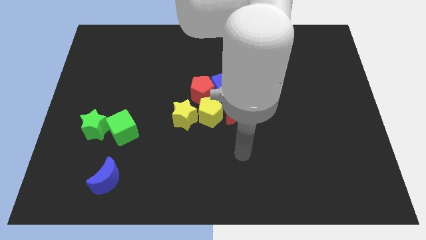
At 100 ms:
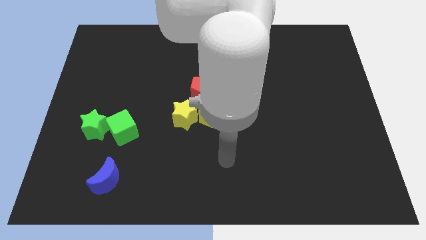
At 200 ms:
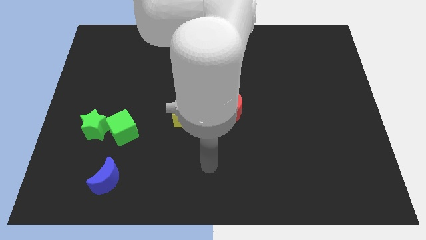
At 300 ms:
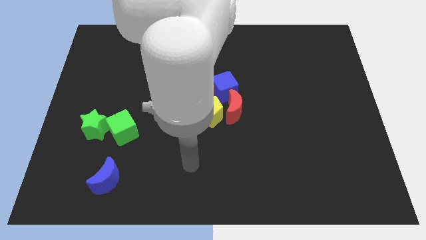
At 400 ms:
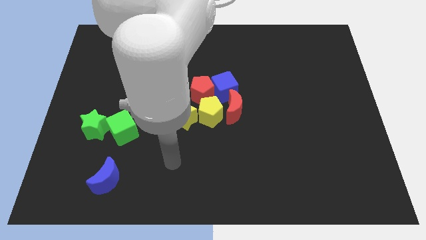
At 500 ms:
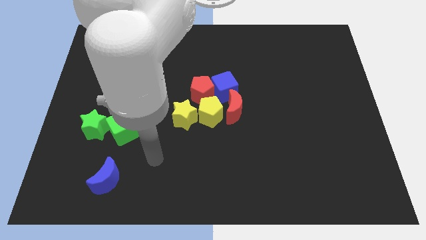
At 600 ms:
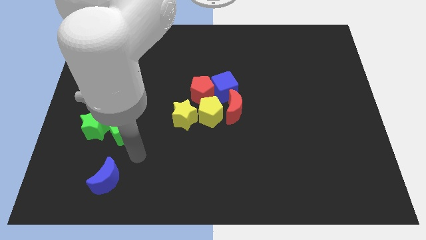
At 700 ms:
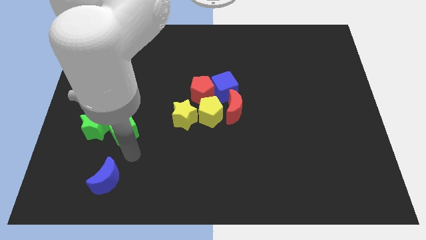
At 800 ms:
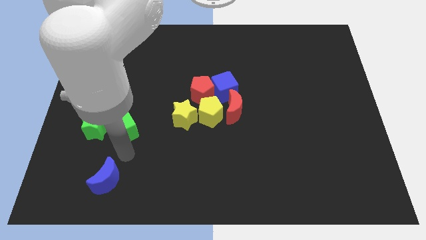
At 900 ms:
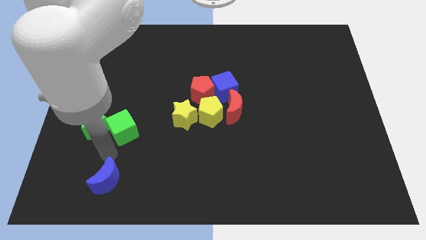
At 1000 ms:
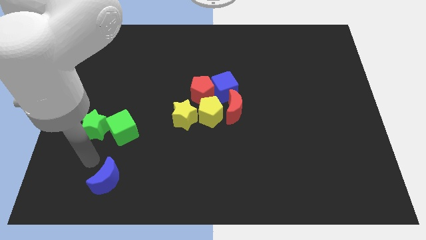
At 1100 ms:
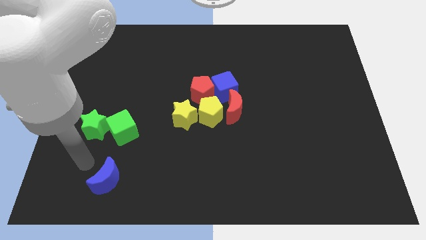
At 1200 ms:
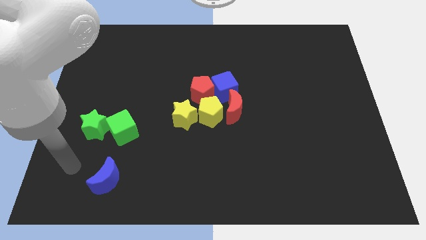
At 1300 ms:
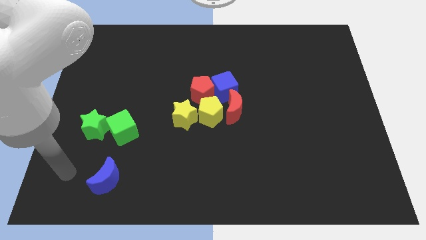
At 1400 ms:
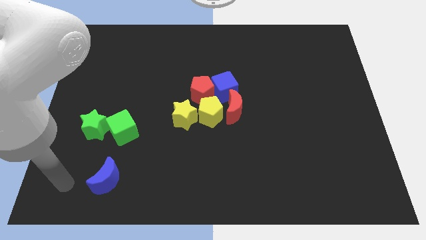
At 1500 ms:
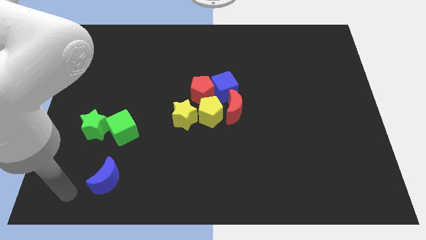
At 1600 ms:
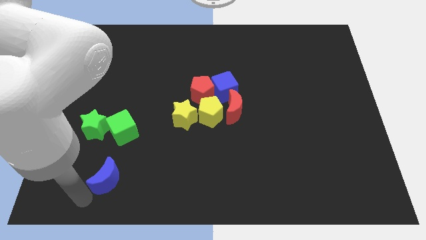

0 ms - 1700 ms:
move your arm close to the blue crescent

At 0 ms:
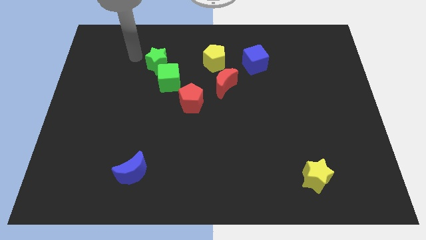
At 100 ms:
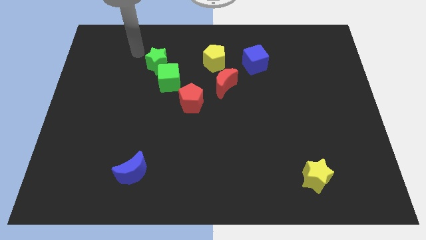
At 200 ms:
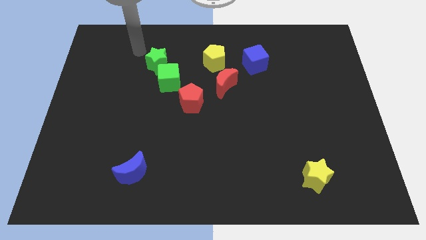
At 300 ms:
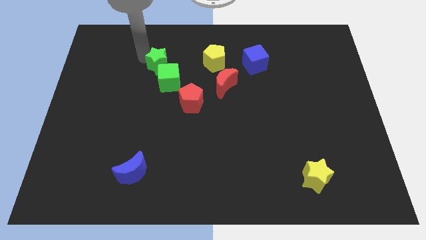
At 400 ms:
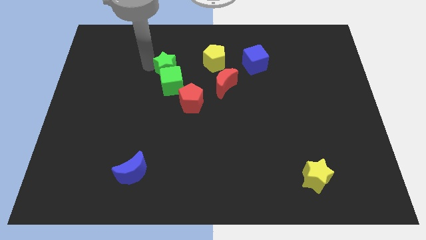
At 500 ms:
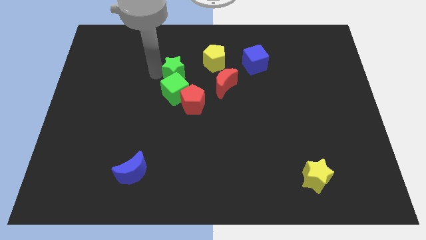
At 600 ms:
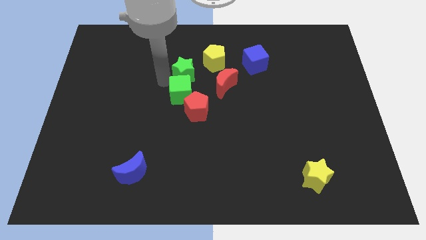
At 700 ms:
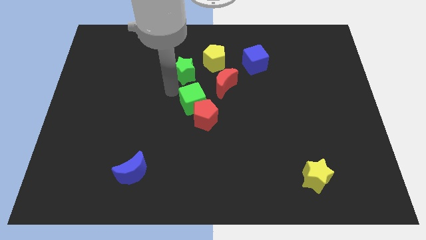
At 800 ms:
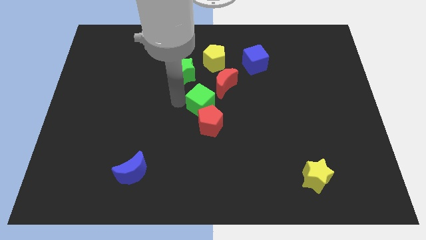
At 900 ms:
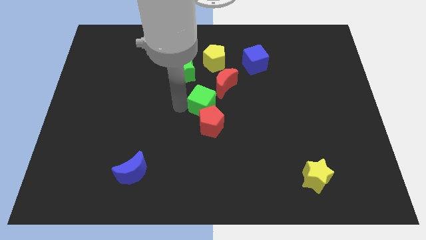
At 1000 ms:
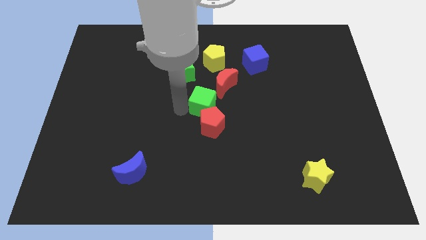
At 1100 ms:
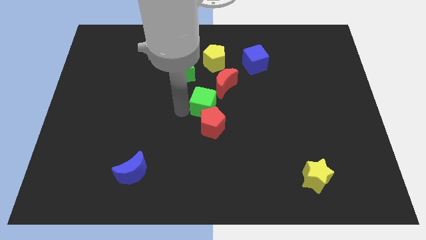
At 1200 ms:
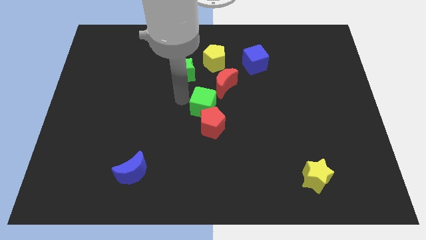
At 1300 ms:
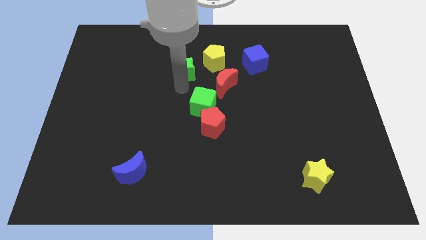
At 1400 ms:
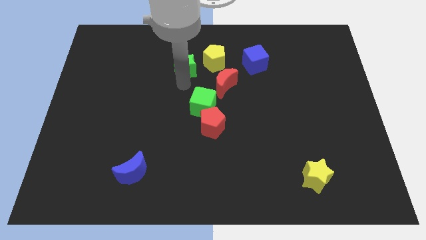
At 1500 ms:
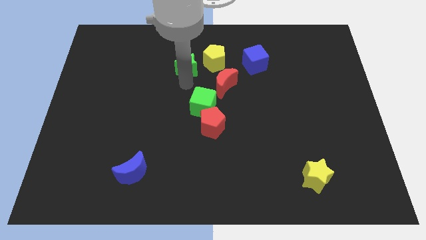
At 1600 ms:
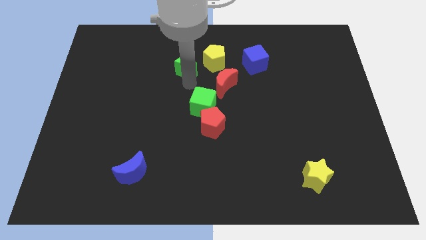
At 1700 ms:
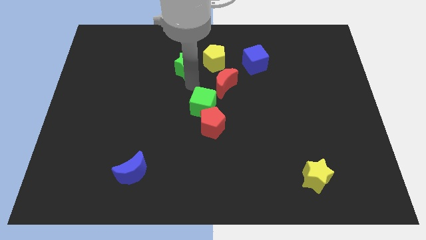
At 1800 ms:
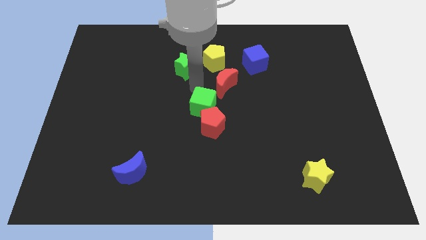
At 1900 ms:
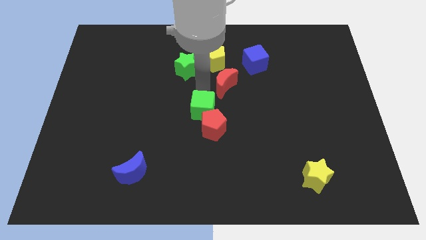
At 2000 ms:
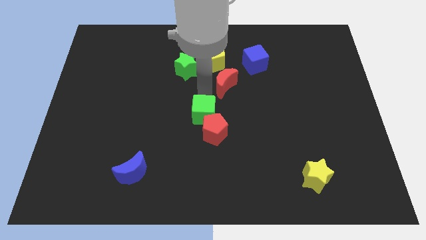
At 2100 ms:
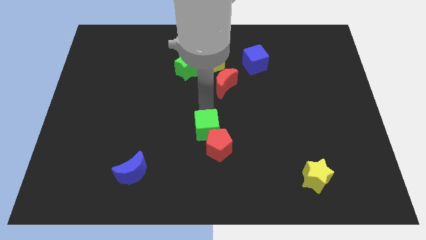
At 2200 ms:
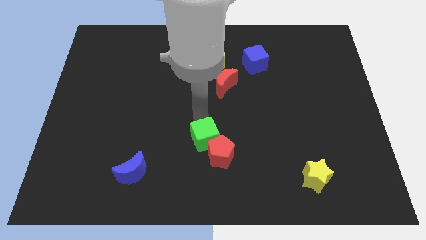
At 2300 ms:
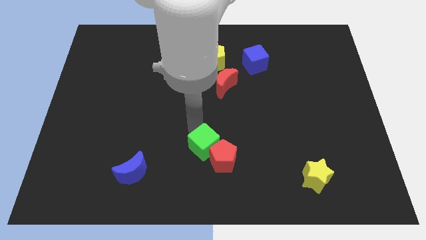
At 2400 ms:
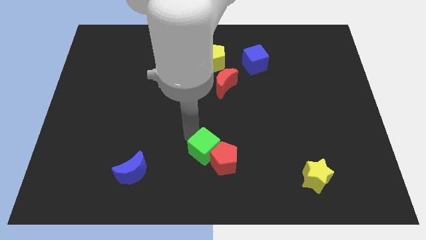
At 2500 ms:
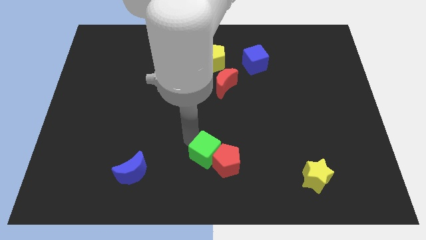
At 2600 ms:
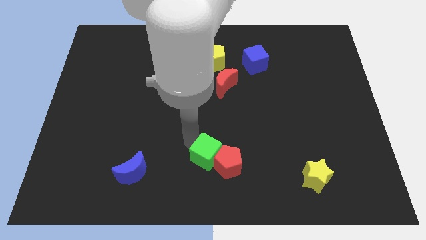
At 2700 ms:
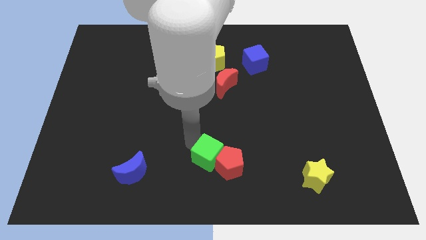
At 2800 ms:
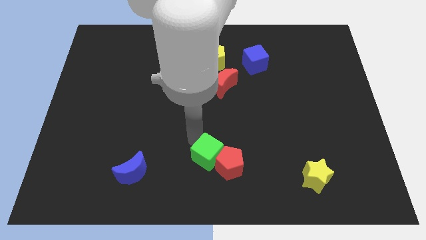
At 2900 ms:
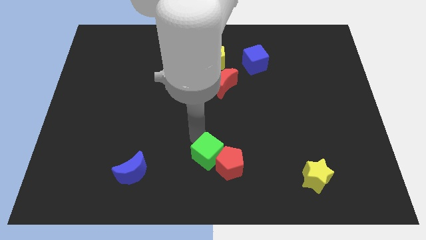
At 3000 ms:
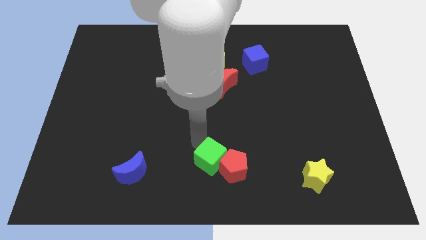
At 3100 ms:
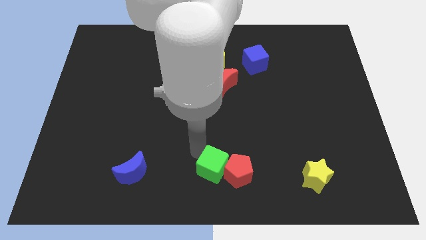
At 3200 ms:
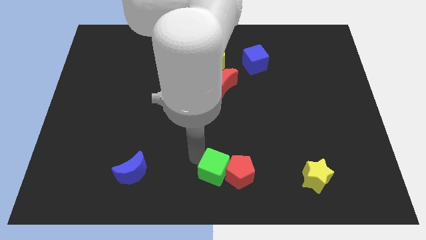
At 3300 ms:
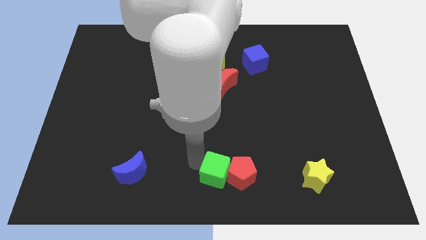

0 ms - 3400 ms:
slide the green cube and the red pentagon towards the bottom center

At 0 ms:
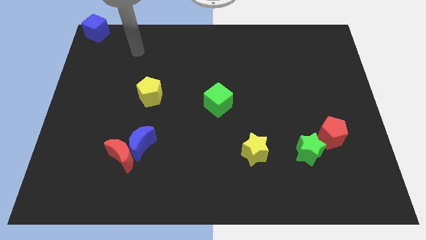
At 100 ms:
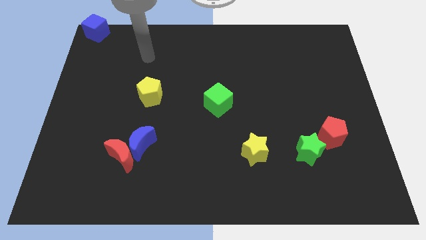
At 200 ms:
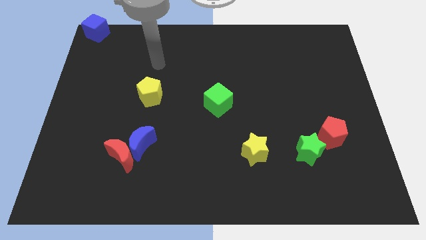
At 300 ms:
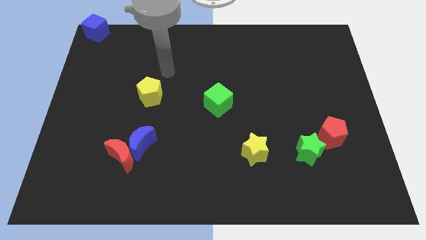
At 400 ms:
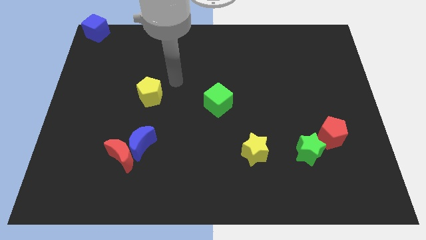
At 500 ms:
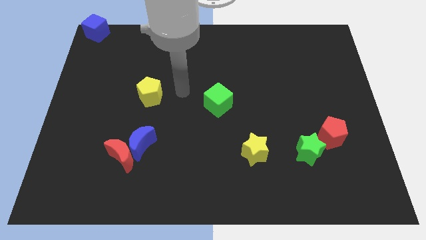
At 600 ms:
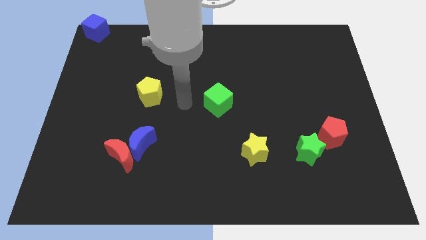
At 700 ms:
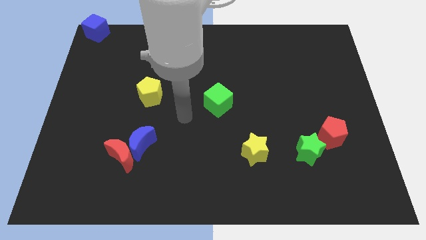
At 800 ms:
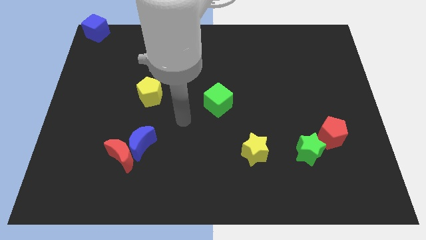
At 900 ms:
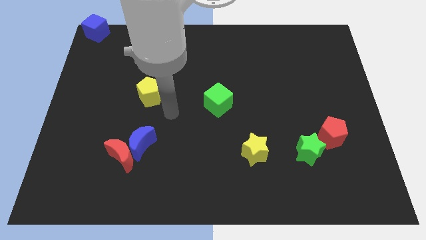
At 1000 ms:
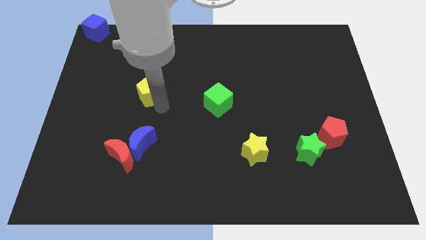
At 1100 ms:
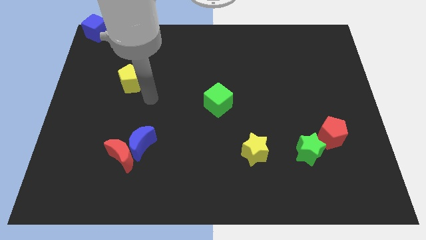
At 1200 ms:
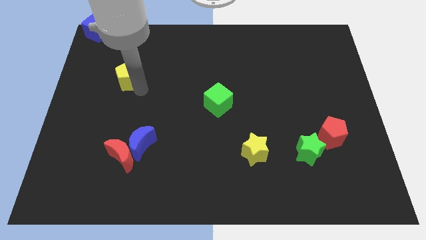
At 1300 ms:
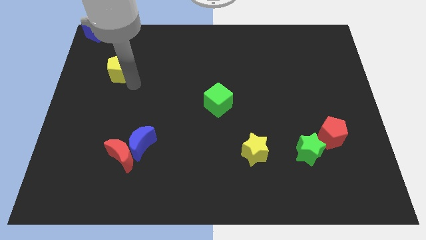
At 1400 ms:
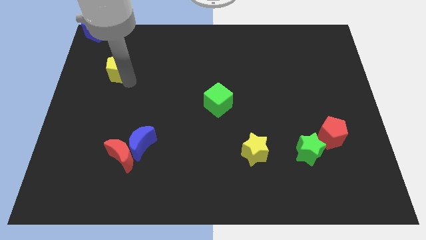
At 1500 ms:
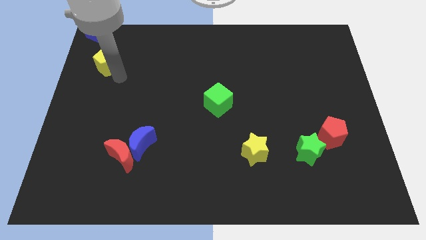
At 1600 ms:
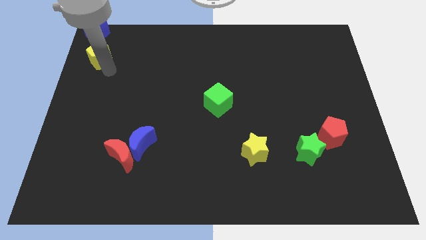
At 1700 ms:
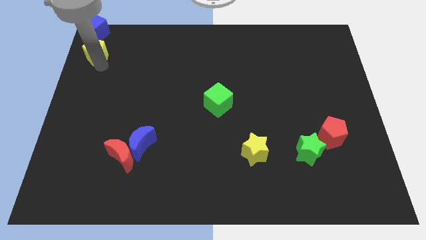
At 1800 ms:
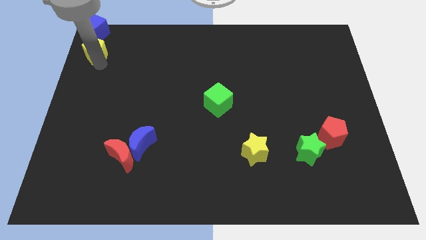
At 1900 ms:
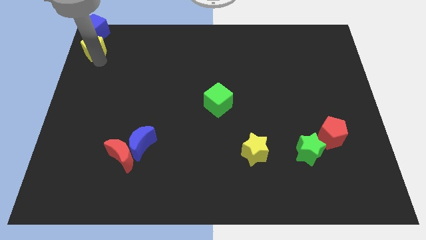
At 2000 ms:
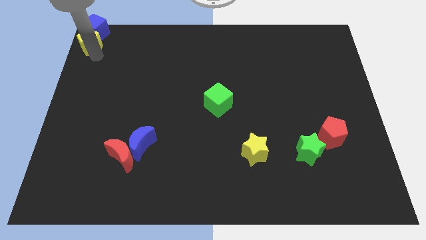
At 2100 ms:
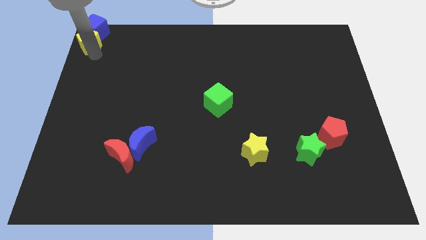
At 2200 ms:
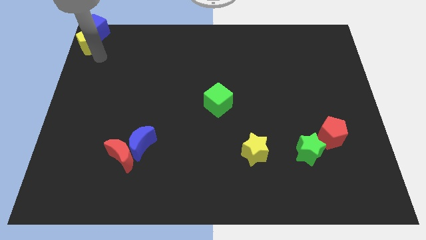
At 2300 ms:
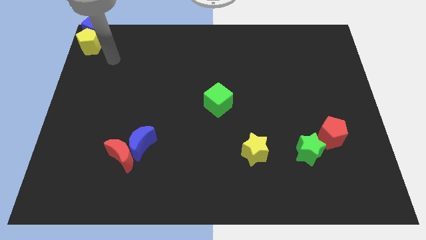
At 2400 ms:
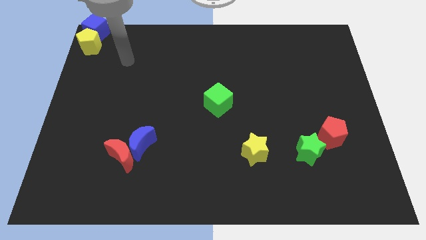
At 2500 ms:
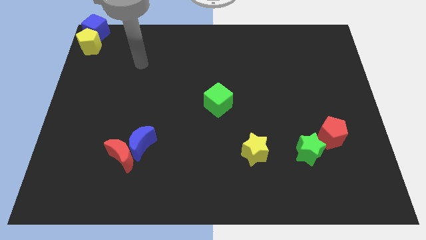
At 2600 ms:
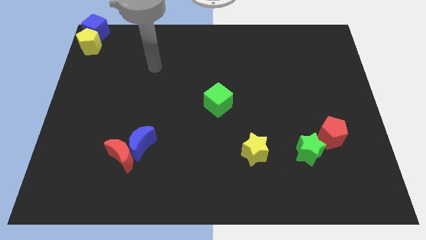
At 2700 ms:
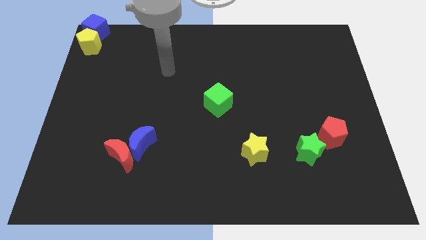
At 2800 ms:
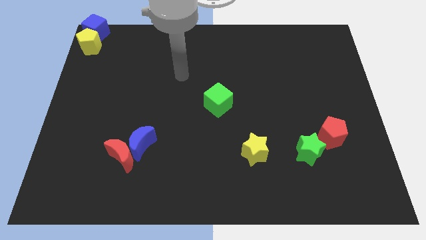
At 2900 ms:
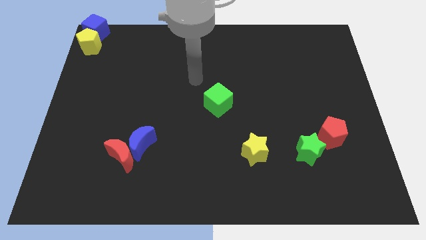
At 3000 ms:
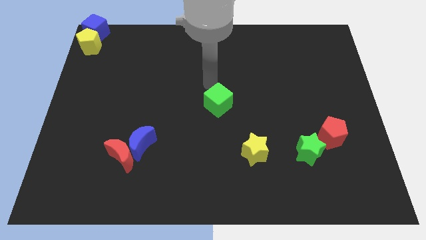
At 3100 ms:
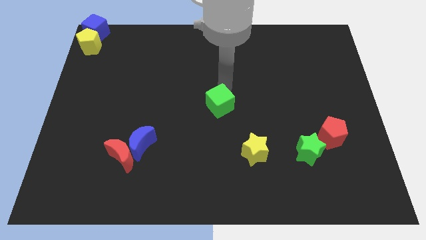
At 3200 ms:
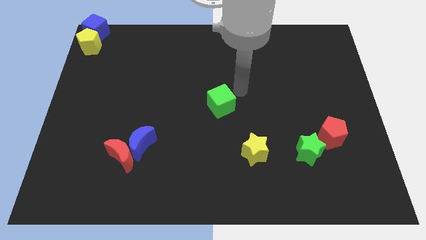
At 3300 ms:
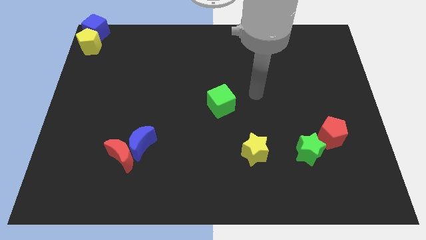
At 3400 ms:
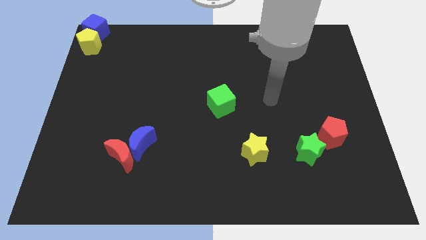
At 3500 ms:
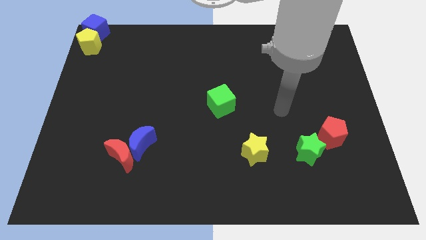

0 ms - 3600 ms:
push the yellow pentagon below the blue cube

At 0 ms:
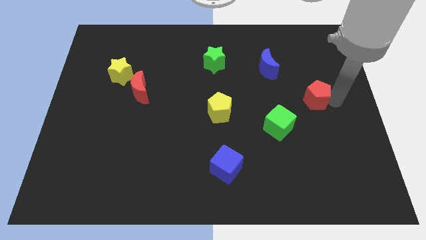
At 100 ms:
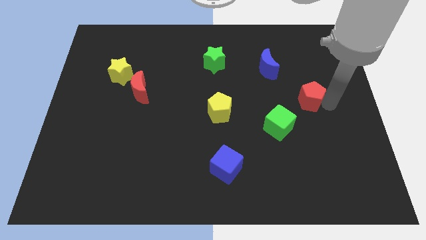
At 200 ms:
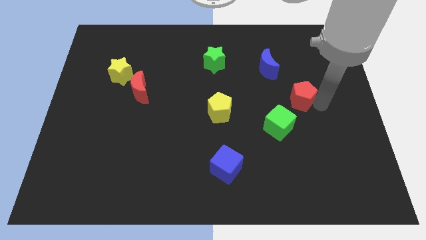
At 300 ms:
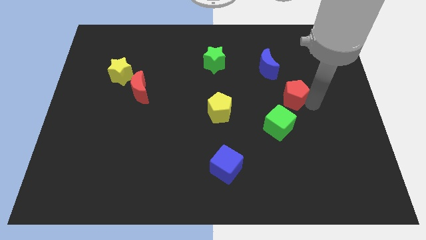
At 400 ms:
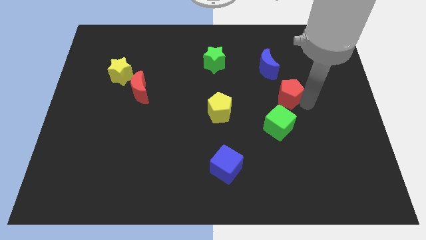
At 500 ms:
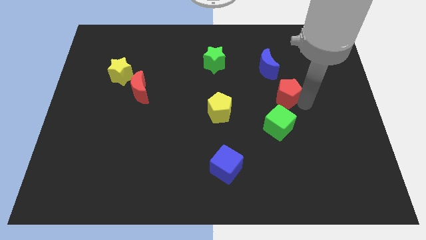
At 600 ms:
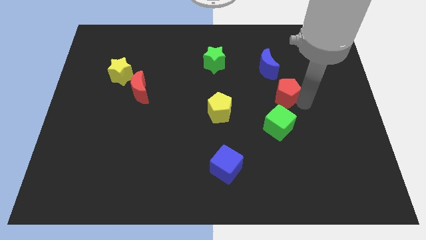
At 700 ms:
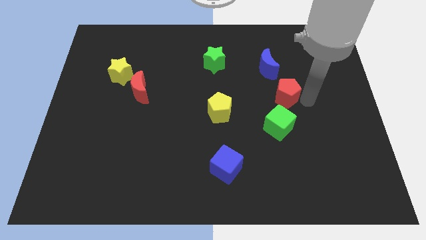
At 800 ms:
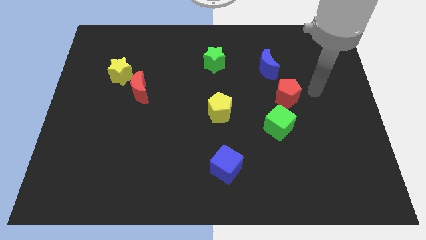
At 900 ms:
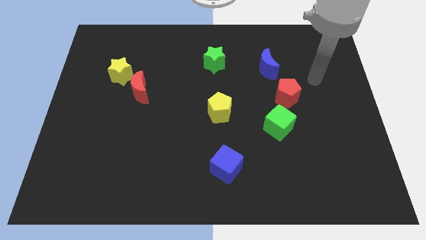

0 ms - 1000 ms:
drag the red pentagon to the left
